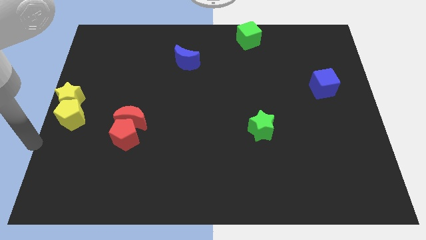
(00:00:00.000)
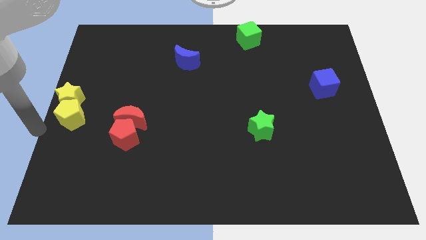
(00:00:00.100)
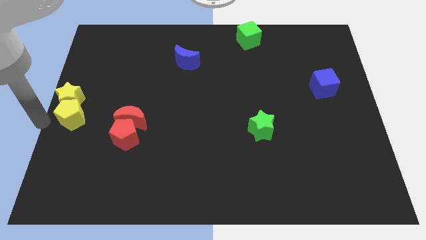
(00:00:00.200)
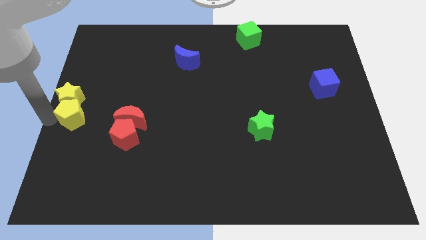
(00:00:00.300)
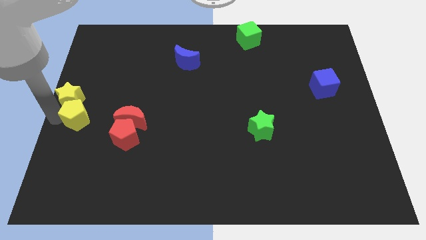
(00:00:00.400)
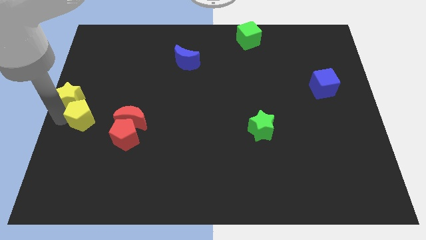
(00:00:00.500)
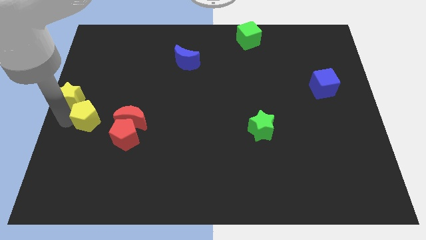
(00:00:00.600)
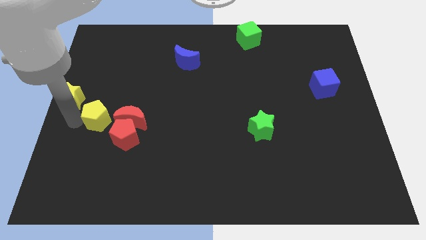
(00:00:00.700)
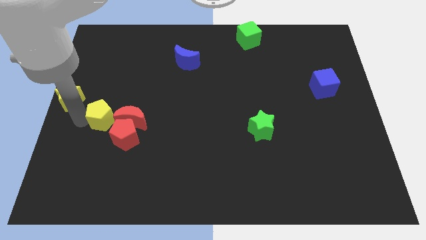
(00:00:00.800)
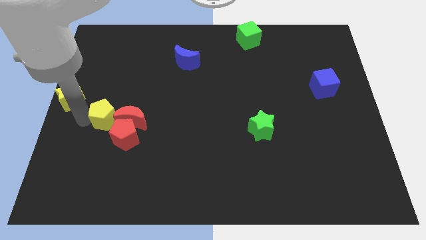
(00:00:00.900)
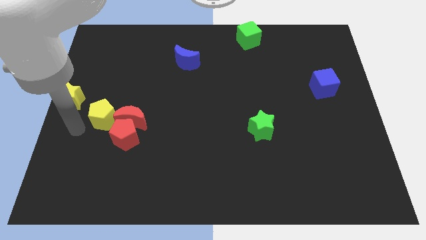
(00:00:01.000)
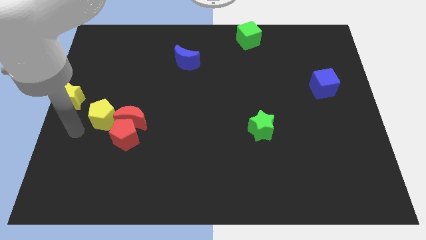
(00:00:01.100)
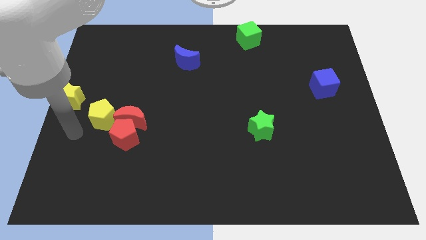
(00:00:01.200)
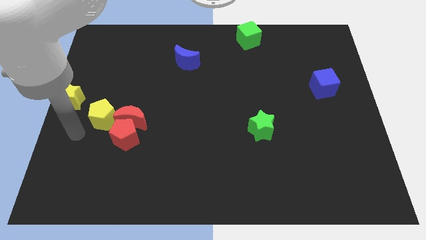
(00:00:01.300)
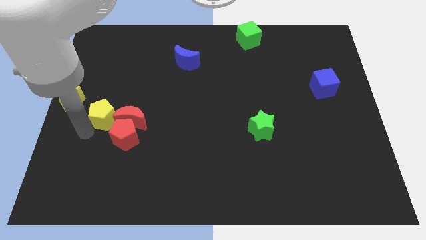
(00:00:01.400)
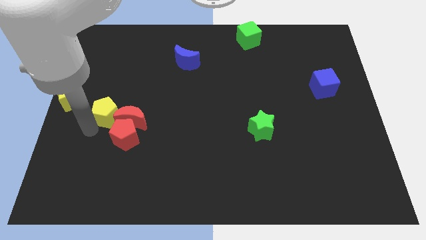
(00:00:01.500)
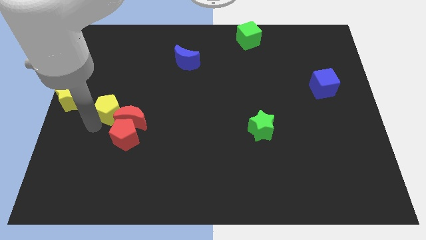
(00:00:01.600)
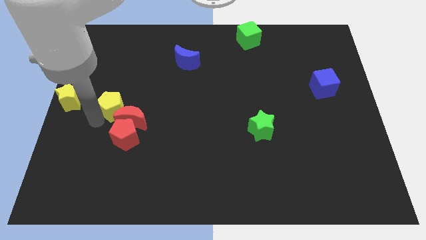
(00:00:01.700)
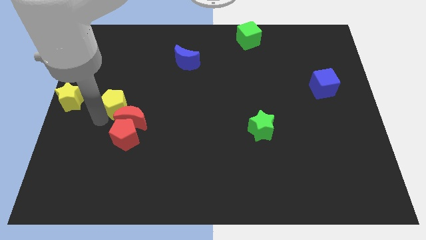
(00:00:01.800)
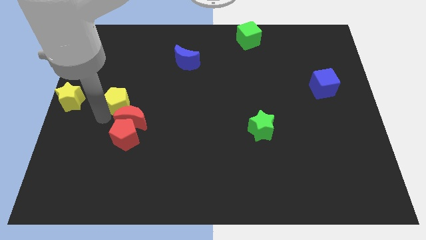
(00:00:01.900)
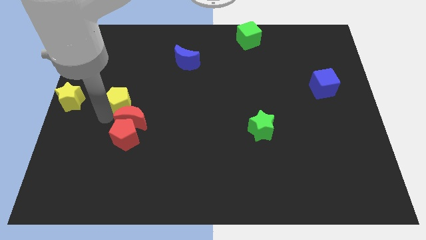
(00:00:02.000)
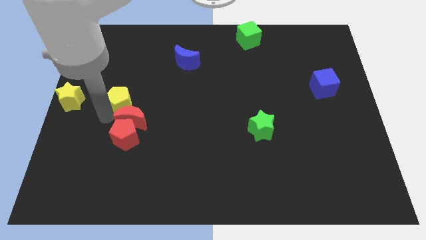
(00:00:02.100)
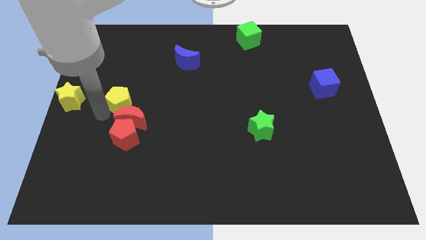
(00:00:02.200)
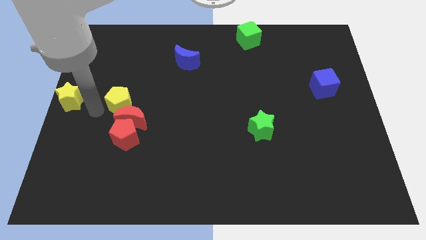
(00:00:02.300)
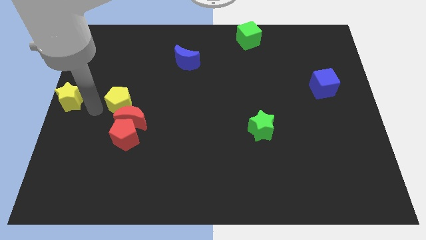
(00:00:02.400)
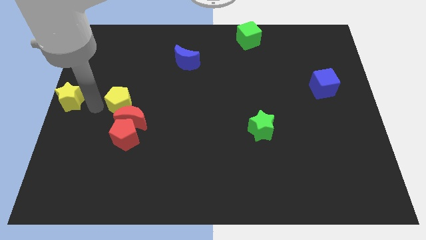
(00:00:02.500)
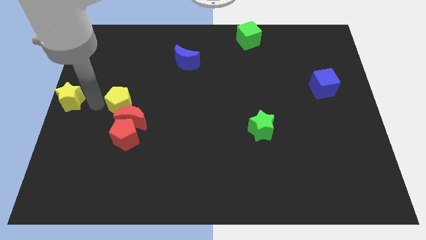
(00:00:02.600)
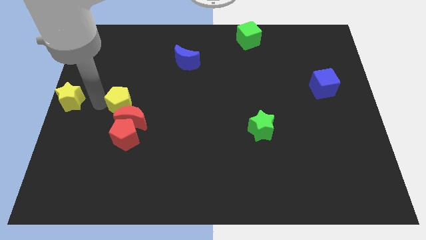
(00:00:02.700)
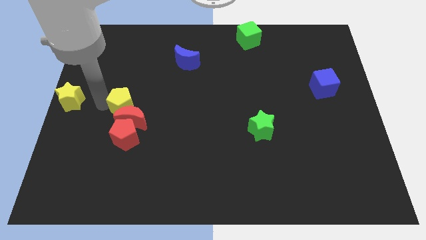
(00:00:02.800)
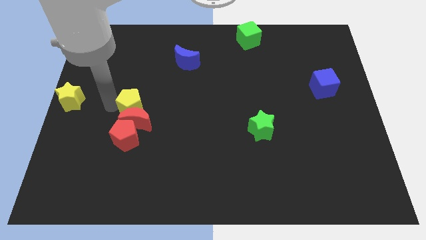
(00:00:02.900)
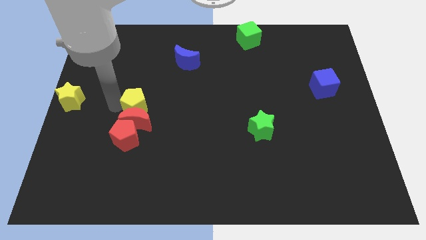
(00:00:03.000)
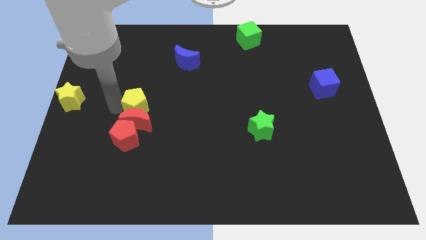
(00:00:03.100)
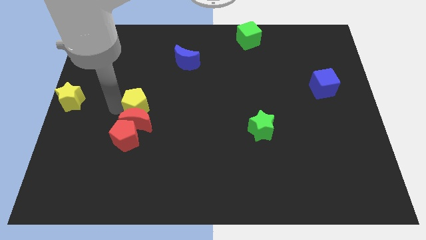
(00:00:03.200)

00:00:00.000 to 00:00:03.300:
slide the yellow pentagon on the top of the red moon

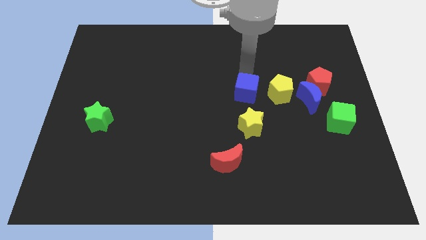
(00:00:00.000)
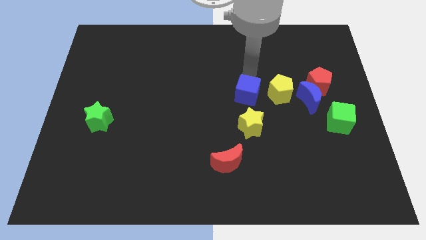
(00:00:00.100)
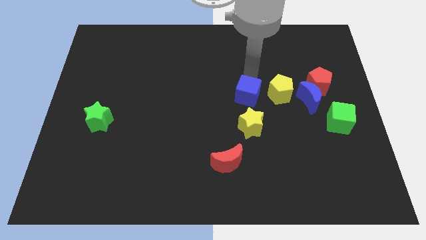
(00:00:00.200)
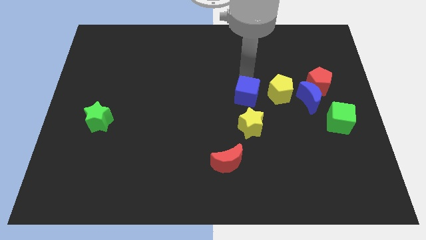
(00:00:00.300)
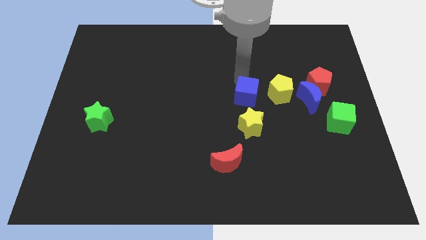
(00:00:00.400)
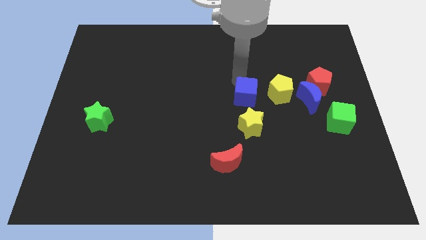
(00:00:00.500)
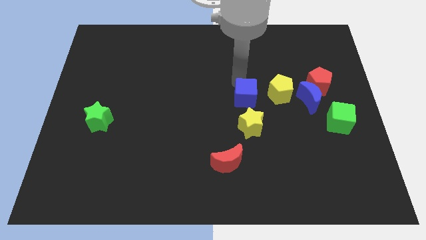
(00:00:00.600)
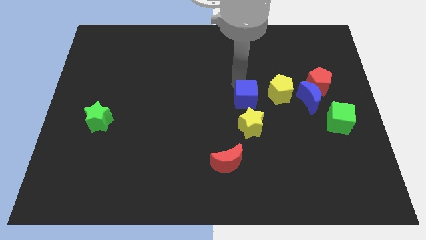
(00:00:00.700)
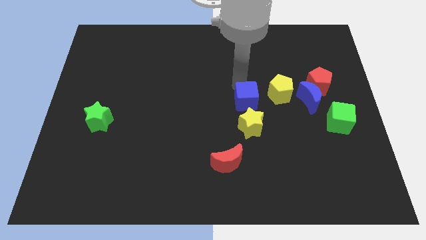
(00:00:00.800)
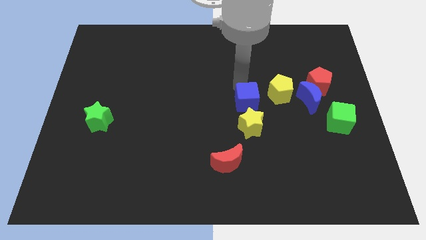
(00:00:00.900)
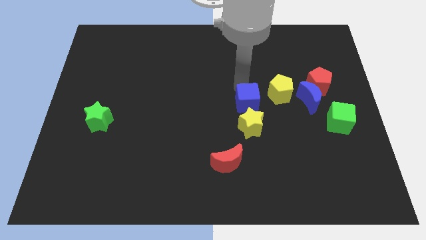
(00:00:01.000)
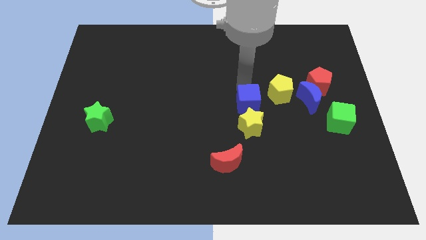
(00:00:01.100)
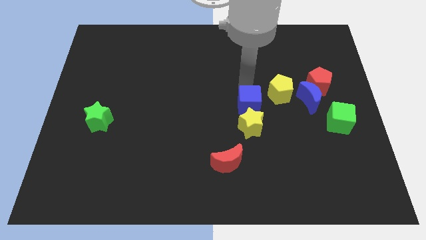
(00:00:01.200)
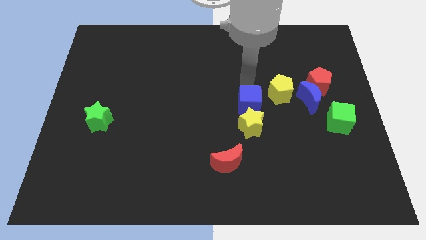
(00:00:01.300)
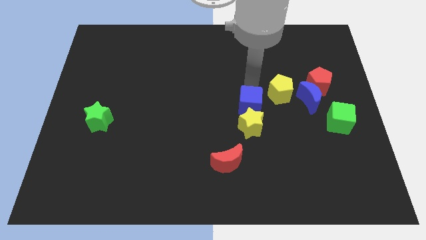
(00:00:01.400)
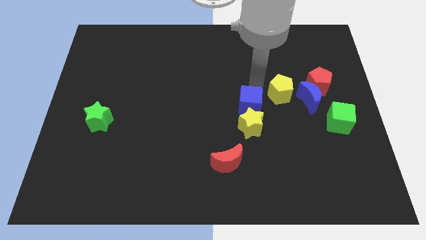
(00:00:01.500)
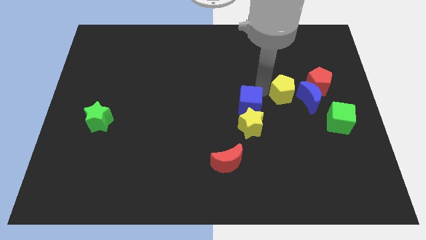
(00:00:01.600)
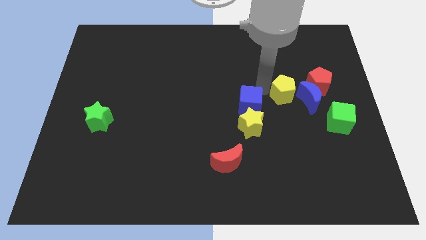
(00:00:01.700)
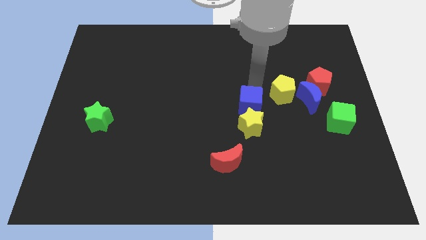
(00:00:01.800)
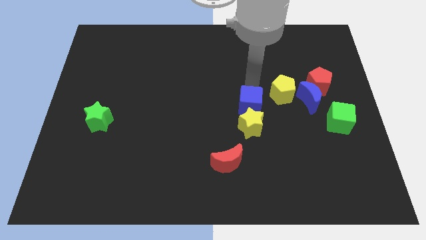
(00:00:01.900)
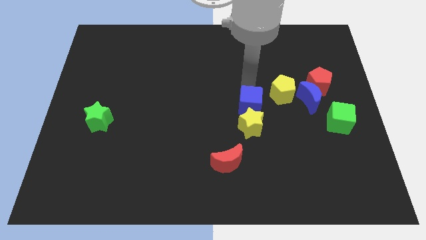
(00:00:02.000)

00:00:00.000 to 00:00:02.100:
place blue cube on top of yellow star

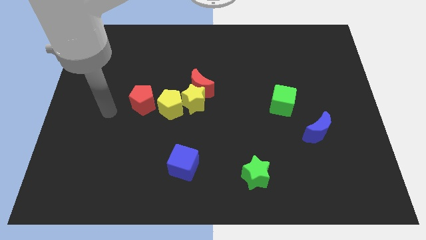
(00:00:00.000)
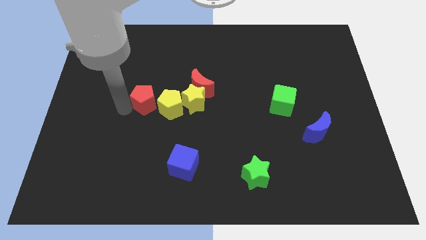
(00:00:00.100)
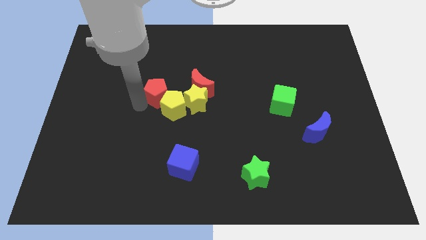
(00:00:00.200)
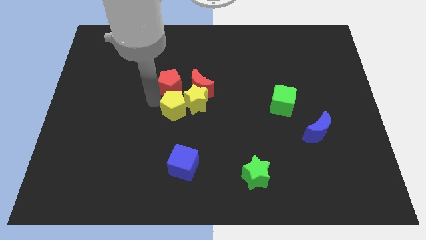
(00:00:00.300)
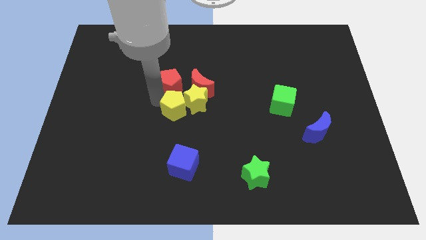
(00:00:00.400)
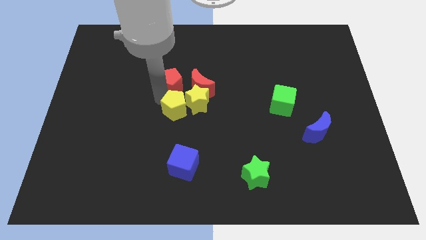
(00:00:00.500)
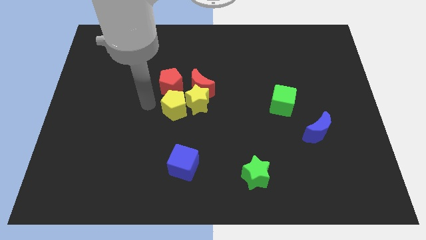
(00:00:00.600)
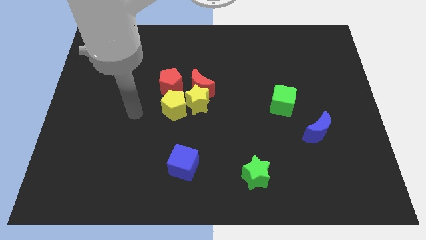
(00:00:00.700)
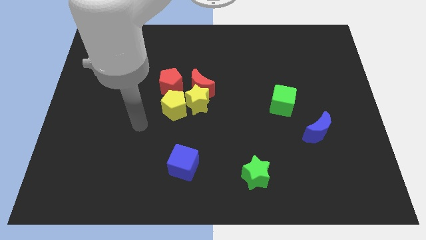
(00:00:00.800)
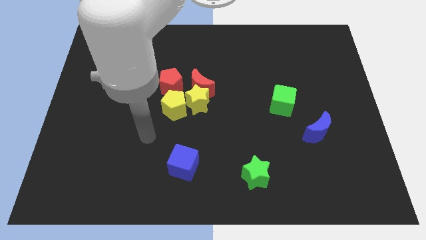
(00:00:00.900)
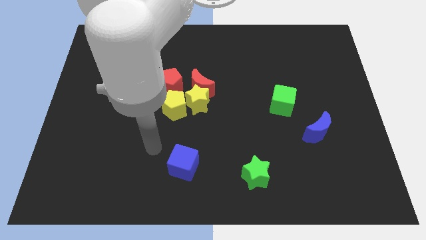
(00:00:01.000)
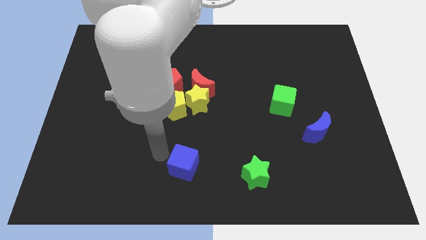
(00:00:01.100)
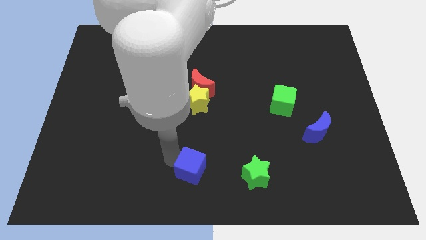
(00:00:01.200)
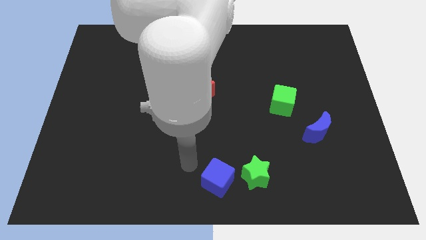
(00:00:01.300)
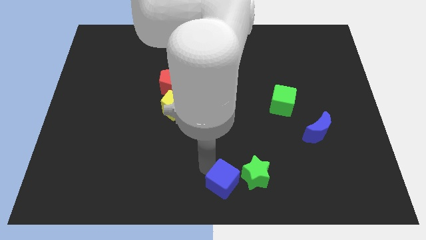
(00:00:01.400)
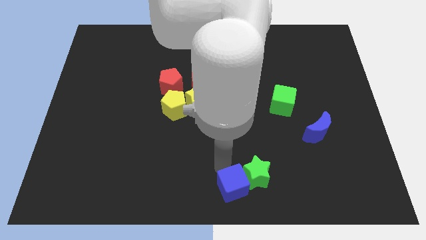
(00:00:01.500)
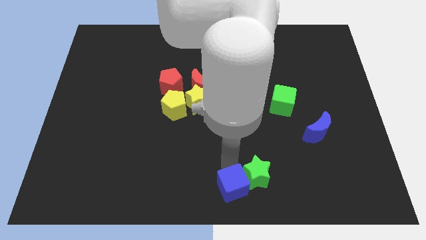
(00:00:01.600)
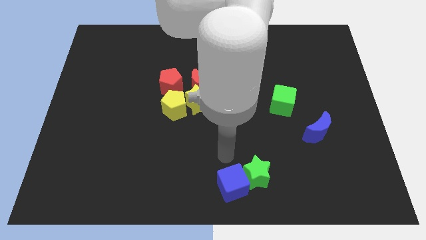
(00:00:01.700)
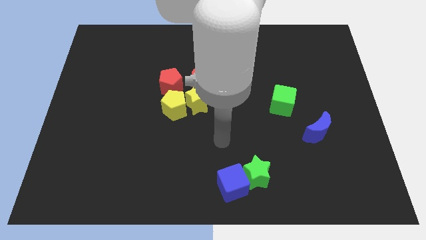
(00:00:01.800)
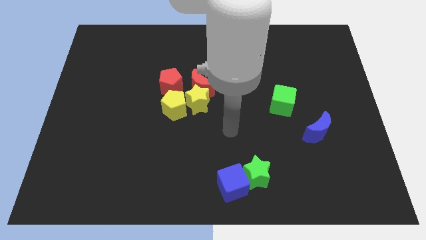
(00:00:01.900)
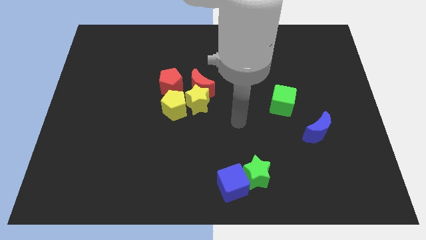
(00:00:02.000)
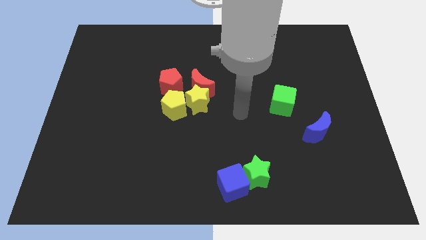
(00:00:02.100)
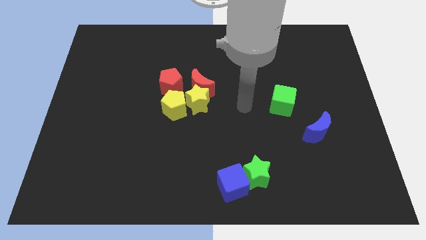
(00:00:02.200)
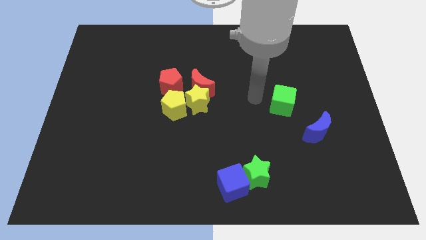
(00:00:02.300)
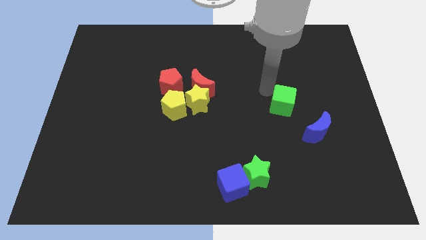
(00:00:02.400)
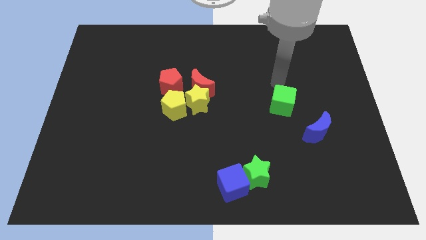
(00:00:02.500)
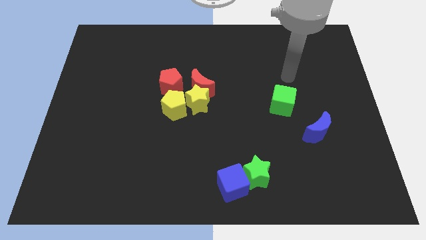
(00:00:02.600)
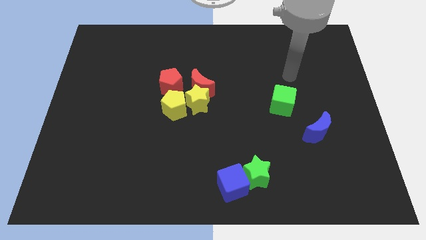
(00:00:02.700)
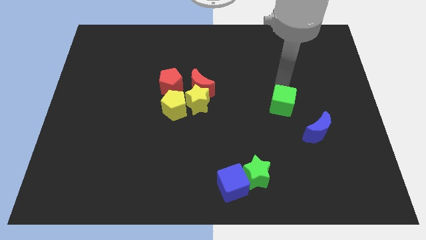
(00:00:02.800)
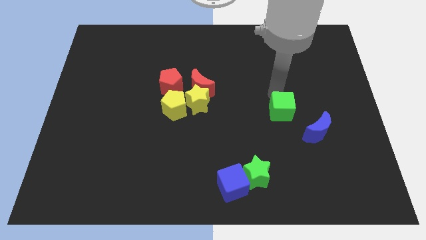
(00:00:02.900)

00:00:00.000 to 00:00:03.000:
place the blue cube left to the green star

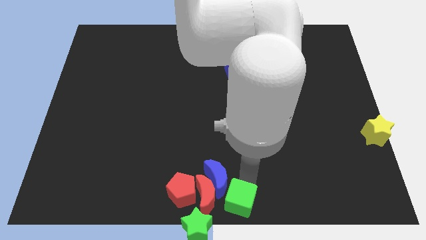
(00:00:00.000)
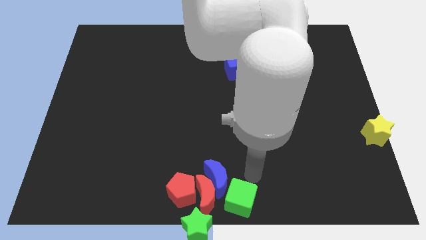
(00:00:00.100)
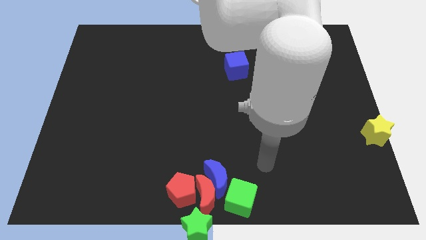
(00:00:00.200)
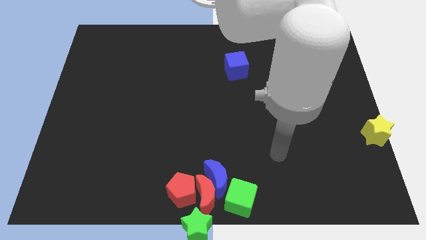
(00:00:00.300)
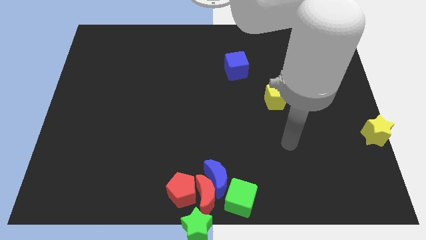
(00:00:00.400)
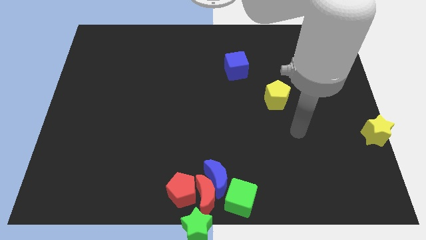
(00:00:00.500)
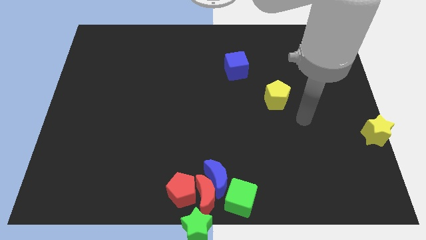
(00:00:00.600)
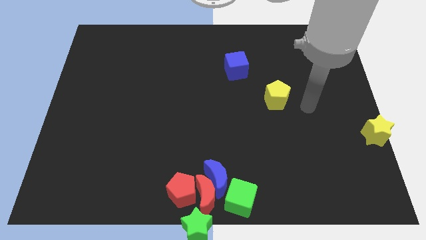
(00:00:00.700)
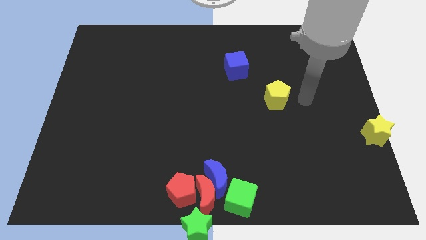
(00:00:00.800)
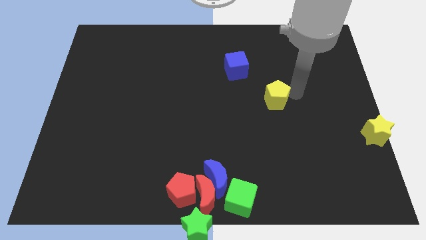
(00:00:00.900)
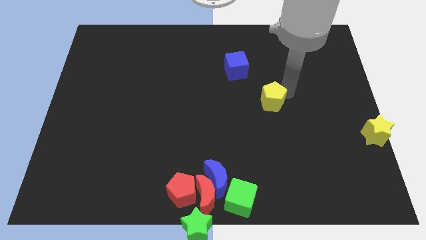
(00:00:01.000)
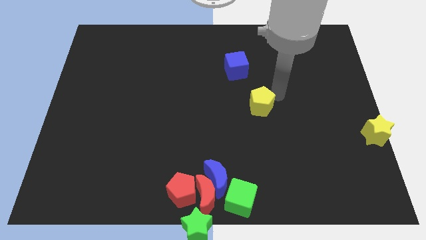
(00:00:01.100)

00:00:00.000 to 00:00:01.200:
move your arm to the top right corner
